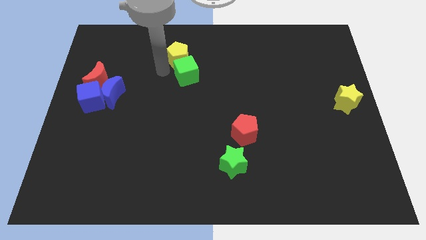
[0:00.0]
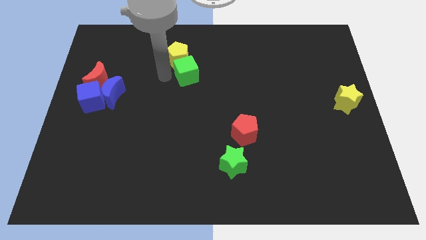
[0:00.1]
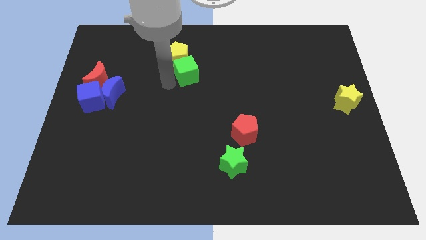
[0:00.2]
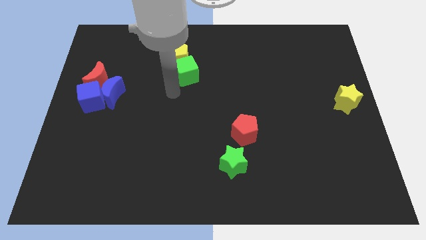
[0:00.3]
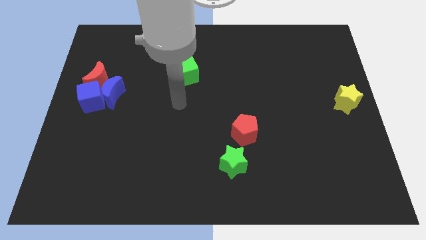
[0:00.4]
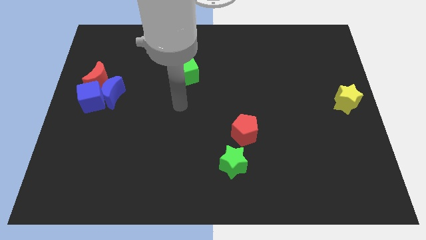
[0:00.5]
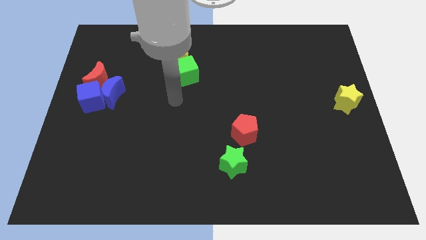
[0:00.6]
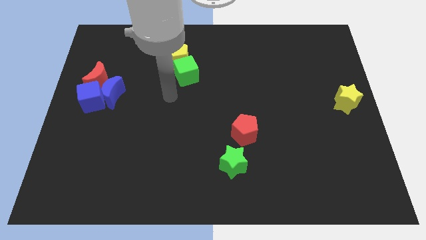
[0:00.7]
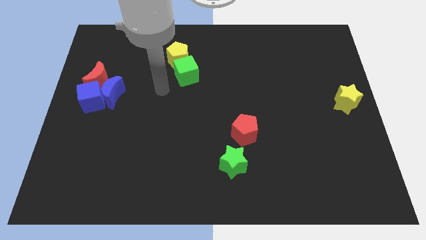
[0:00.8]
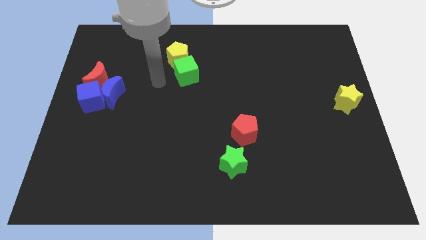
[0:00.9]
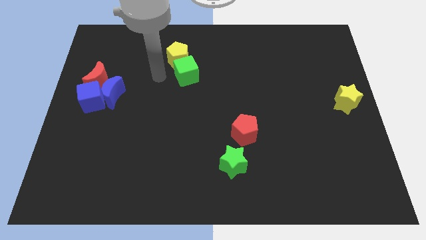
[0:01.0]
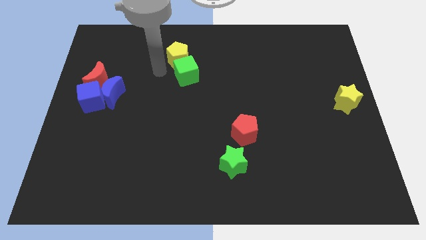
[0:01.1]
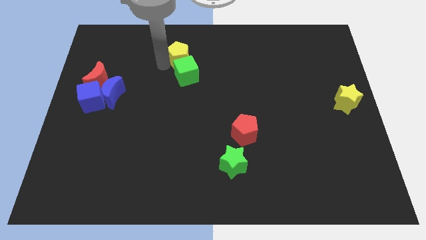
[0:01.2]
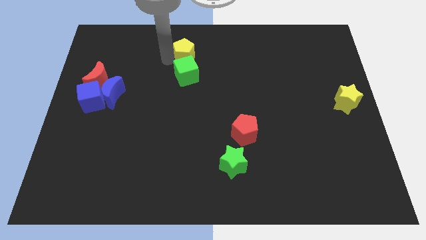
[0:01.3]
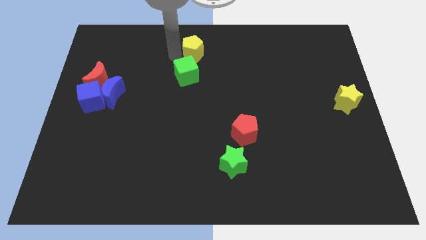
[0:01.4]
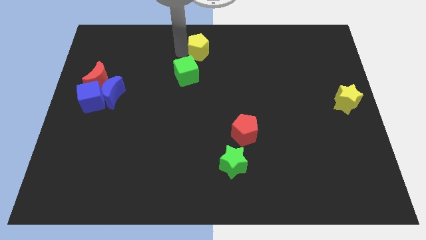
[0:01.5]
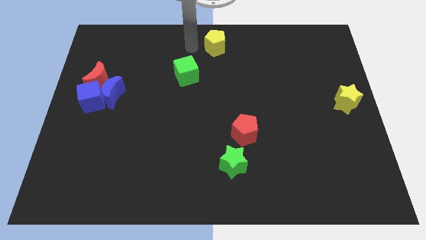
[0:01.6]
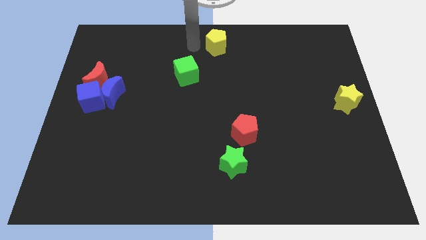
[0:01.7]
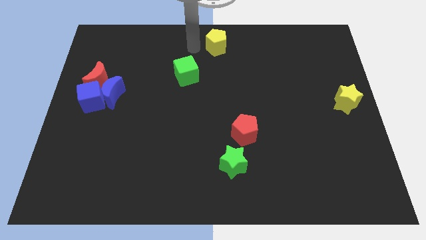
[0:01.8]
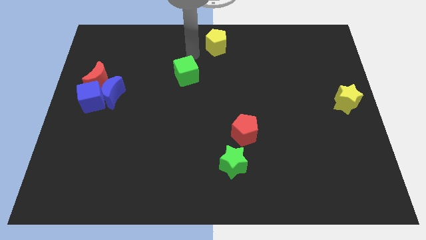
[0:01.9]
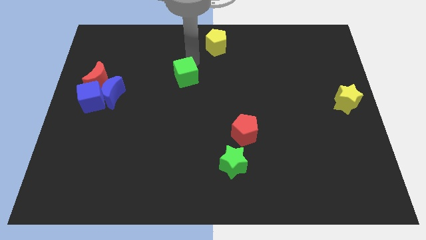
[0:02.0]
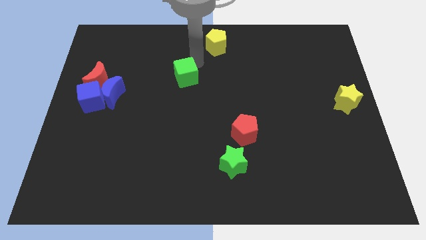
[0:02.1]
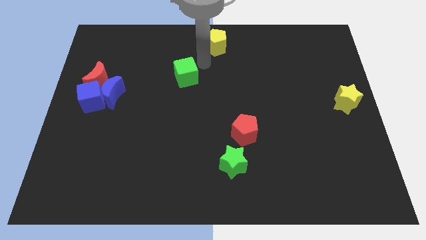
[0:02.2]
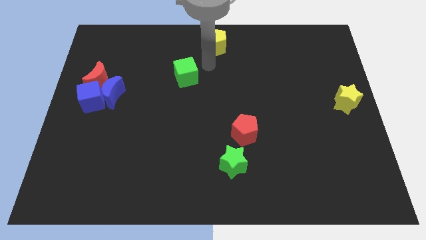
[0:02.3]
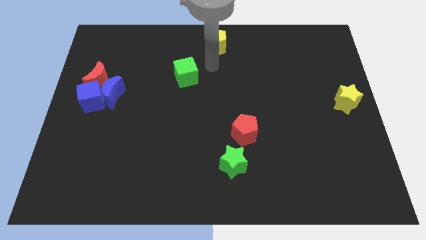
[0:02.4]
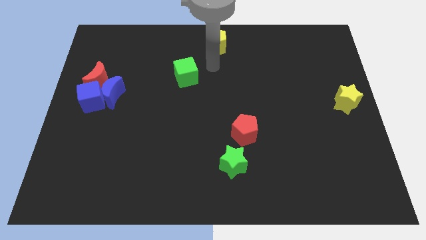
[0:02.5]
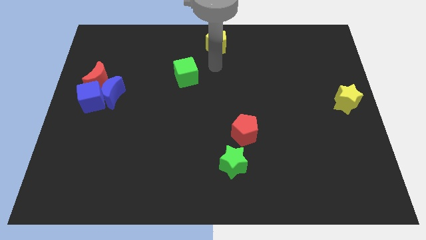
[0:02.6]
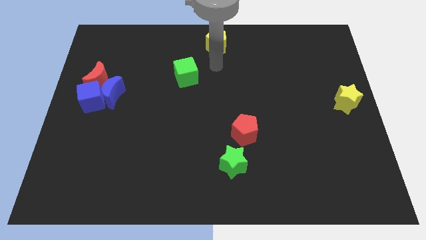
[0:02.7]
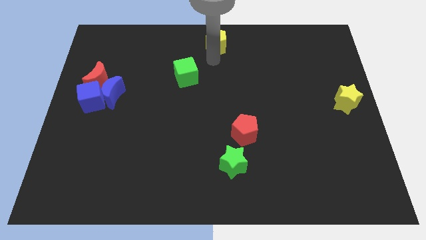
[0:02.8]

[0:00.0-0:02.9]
move the yellow pentagon to the top middle of the board

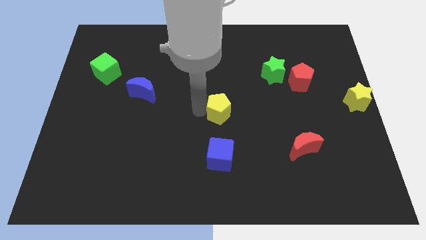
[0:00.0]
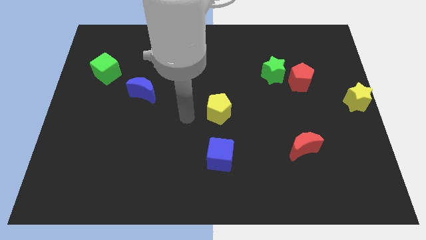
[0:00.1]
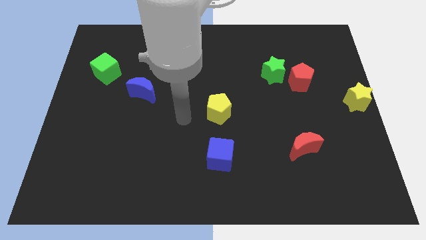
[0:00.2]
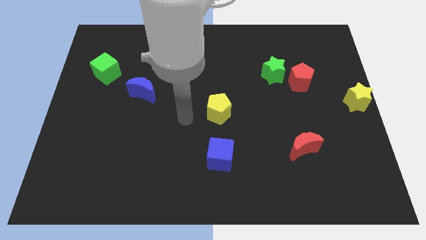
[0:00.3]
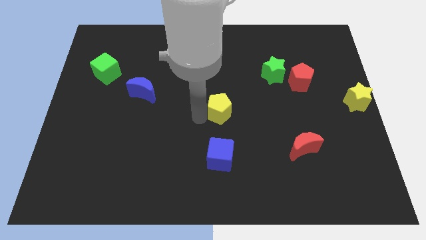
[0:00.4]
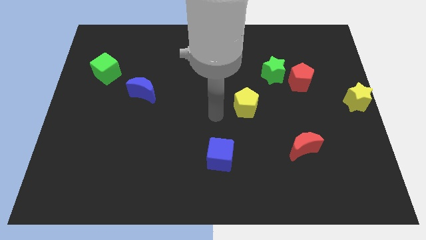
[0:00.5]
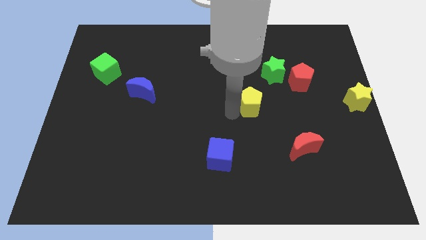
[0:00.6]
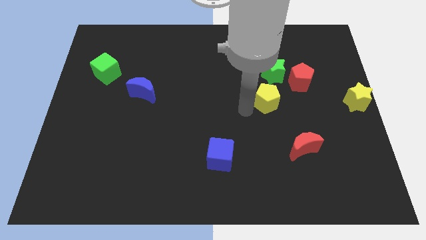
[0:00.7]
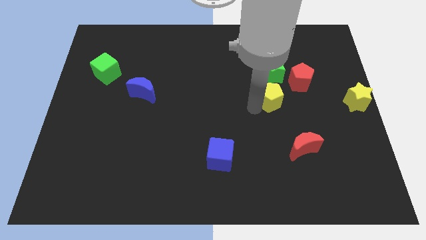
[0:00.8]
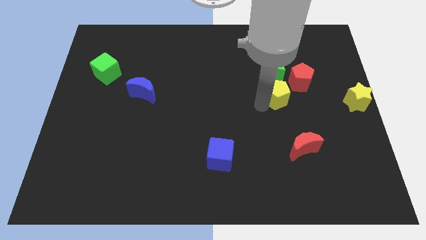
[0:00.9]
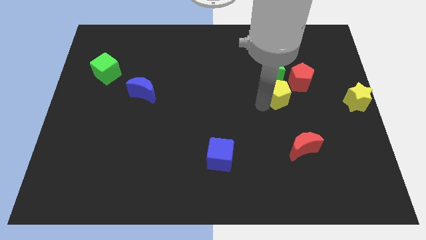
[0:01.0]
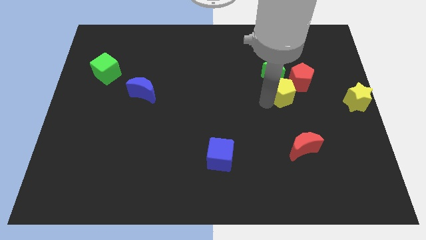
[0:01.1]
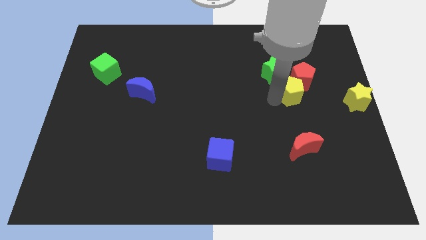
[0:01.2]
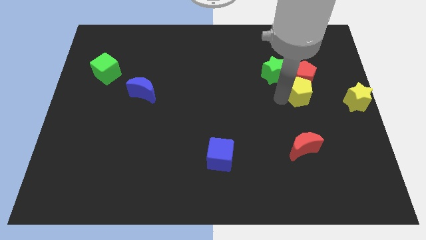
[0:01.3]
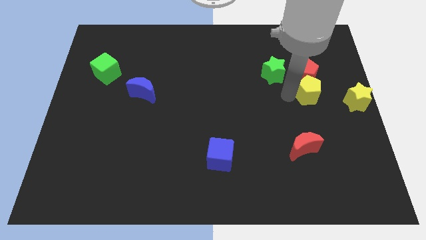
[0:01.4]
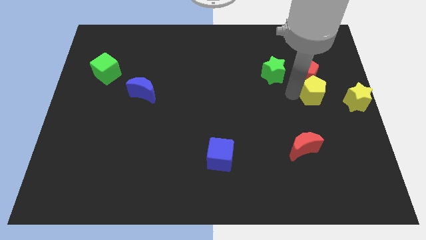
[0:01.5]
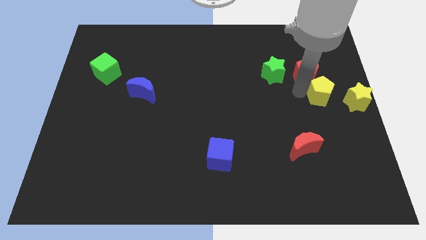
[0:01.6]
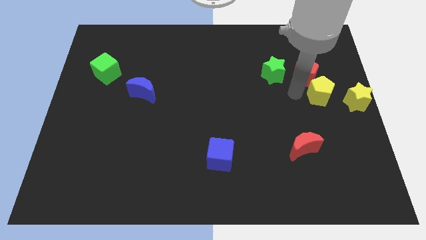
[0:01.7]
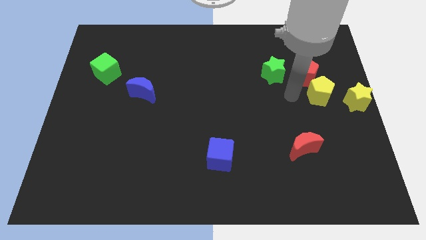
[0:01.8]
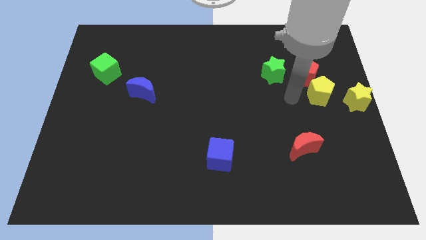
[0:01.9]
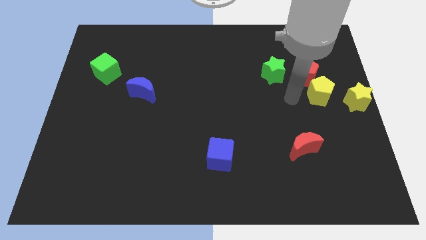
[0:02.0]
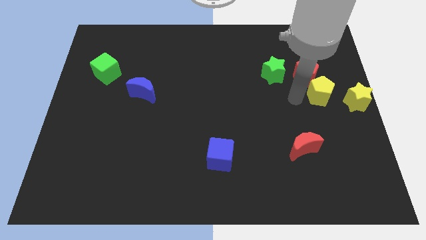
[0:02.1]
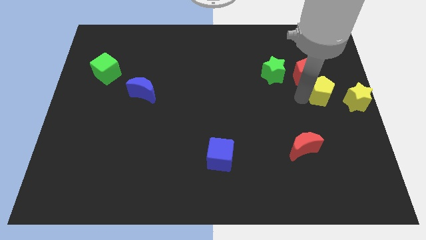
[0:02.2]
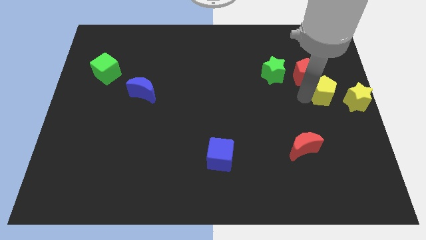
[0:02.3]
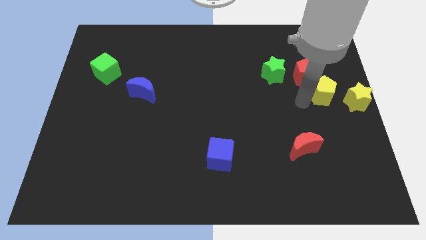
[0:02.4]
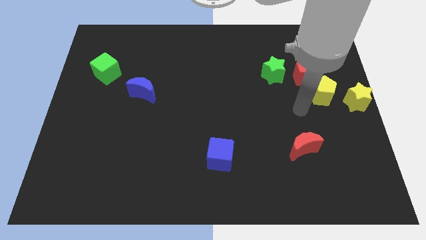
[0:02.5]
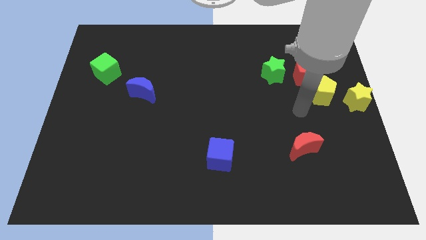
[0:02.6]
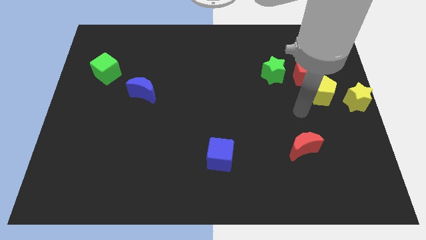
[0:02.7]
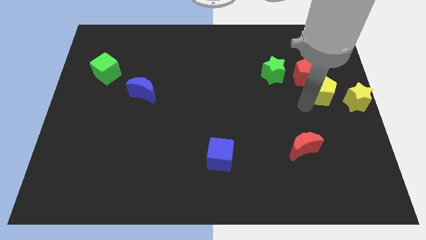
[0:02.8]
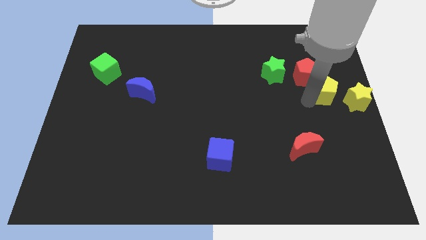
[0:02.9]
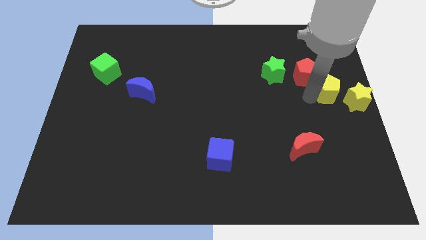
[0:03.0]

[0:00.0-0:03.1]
move yellow pentagon towards center right

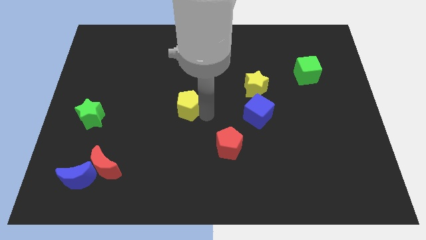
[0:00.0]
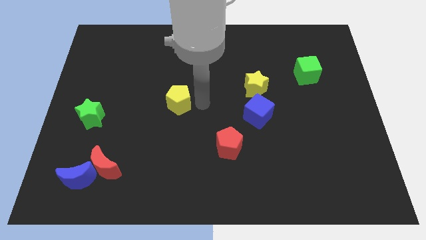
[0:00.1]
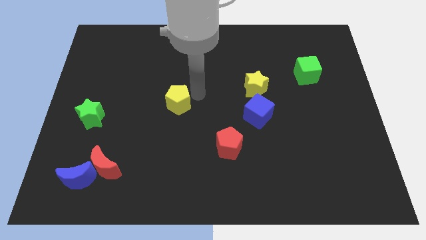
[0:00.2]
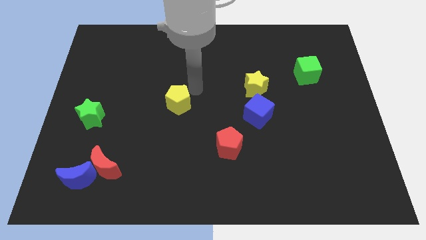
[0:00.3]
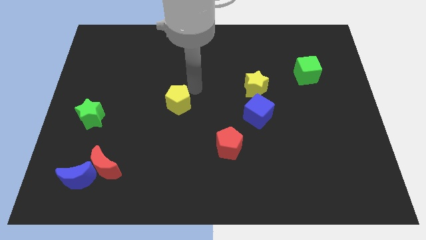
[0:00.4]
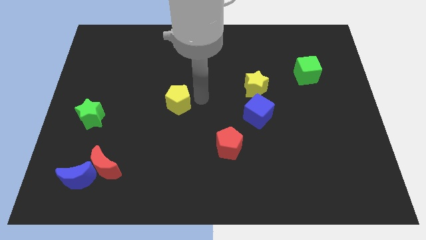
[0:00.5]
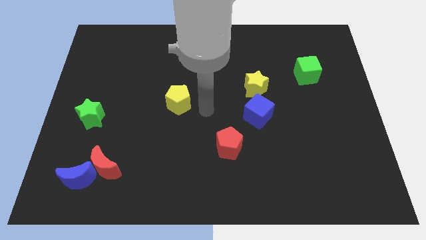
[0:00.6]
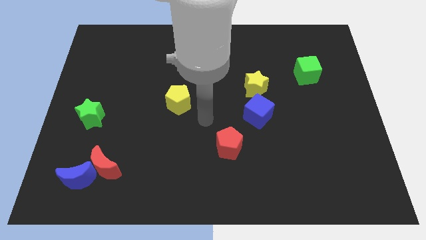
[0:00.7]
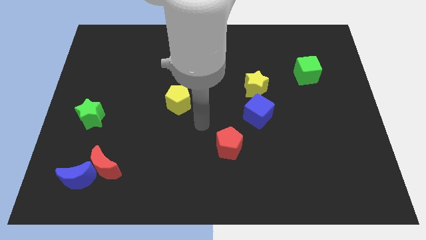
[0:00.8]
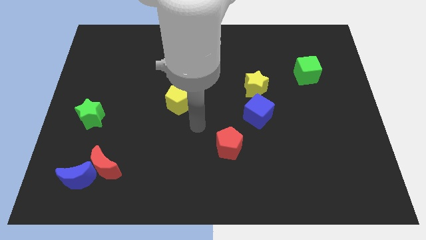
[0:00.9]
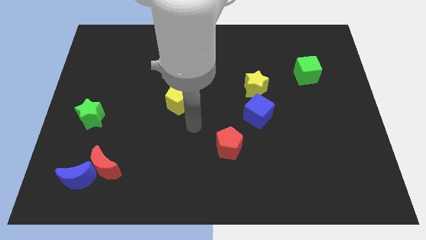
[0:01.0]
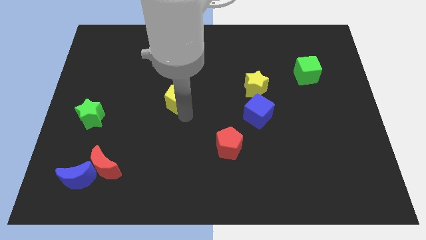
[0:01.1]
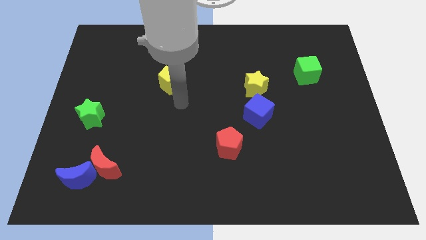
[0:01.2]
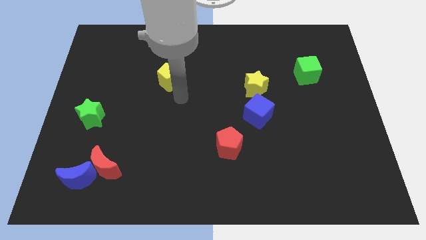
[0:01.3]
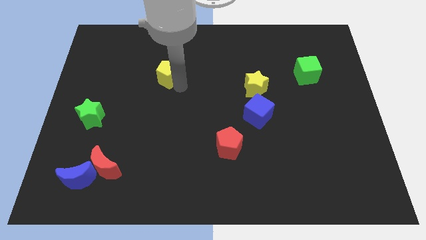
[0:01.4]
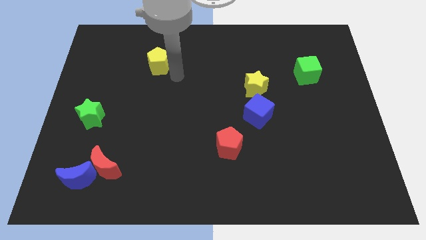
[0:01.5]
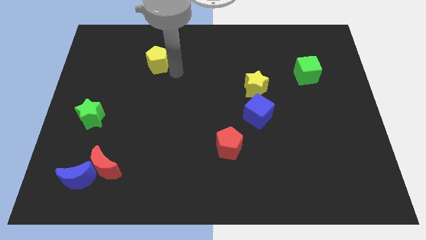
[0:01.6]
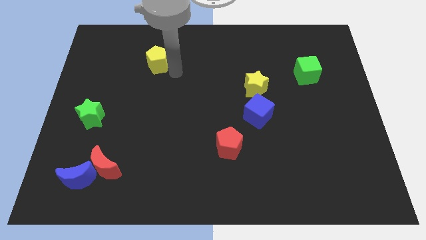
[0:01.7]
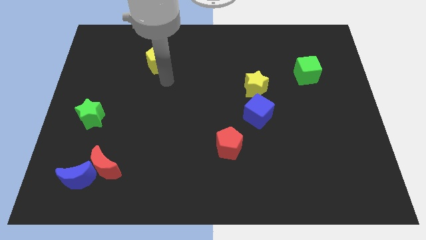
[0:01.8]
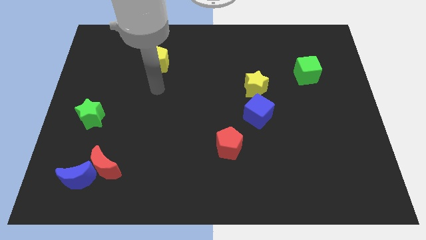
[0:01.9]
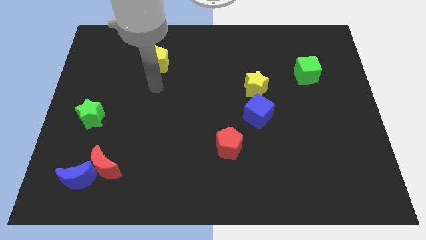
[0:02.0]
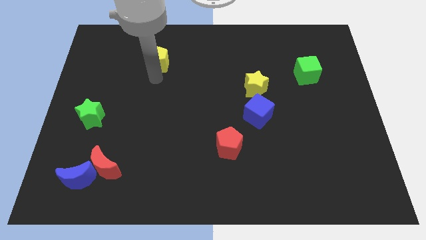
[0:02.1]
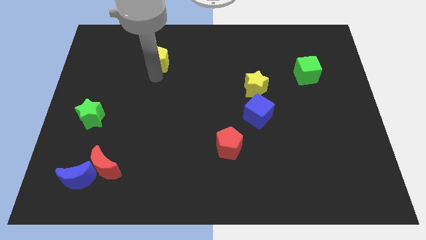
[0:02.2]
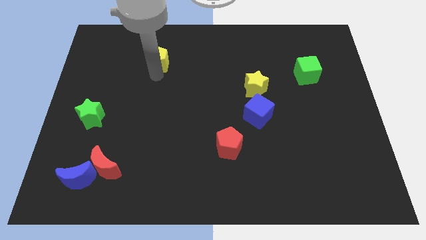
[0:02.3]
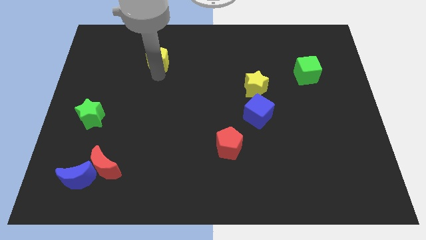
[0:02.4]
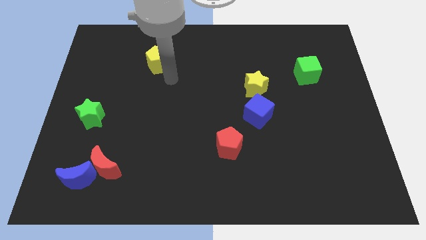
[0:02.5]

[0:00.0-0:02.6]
drag the yellow pentagon towards the top side

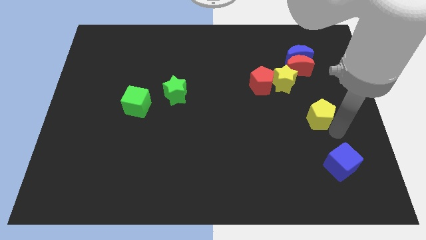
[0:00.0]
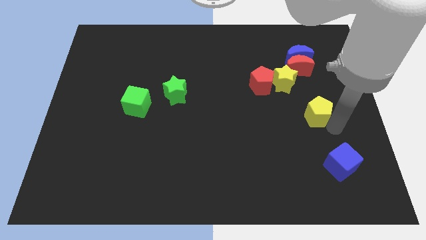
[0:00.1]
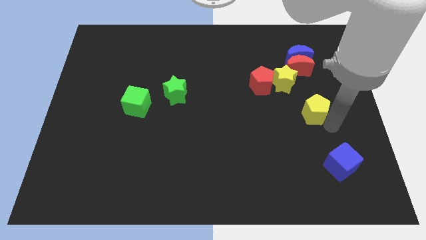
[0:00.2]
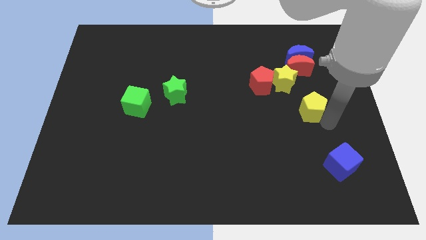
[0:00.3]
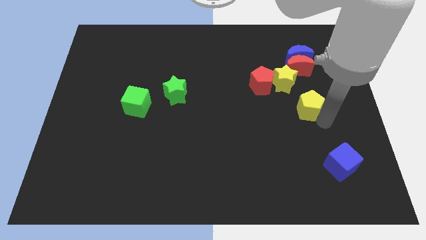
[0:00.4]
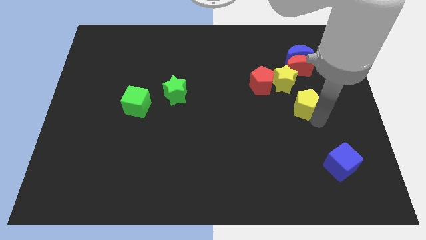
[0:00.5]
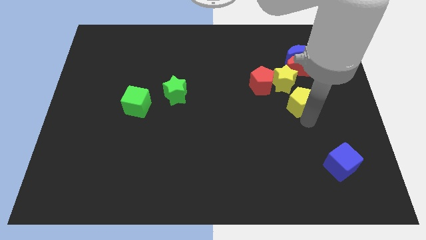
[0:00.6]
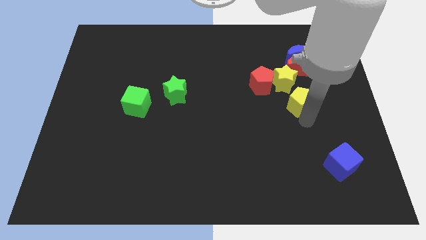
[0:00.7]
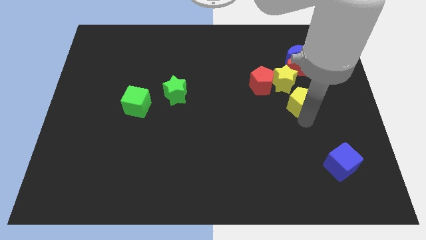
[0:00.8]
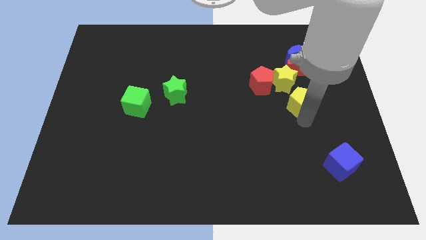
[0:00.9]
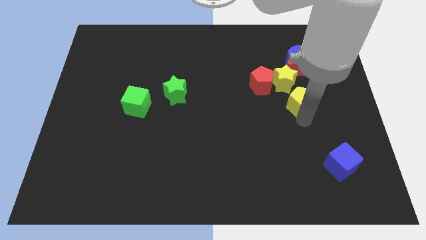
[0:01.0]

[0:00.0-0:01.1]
place yellow pentagon below the yellow star
